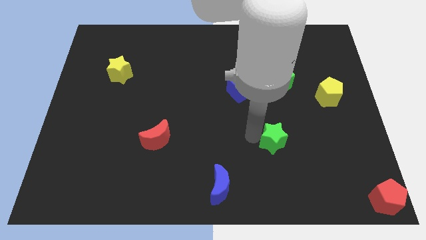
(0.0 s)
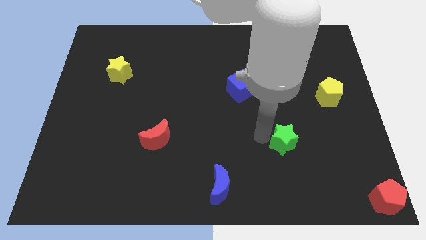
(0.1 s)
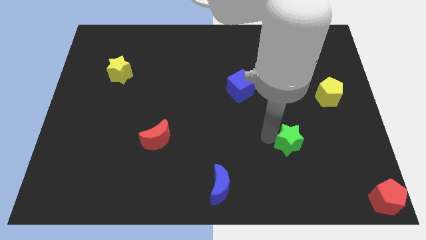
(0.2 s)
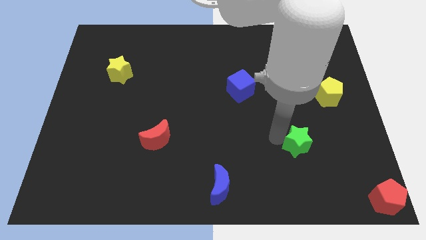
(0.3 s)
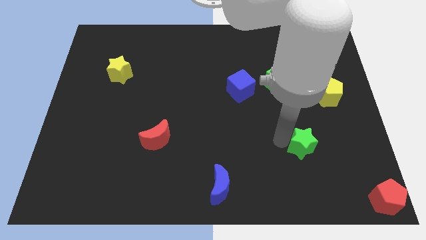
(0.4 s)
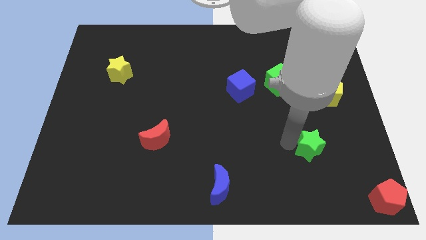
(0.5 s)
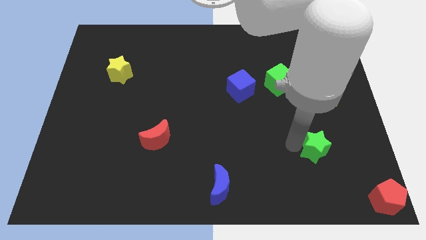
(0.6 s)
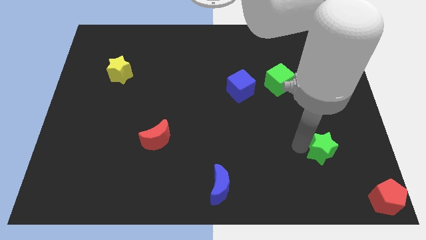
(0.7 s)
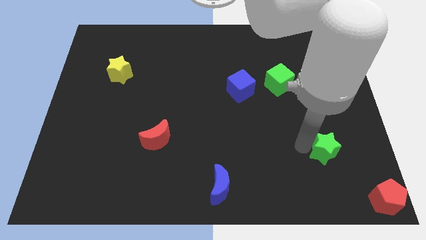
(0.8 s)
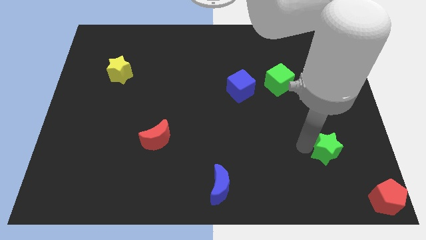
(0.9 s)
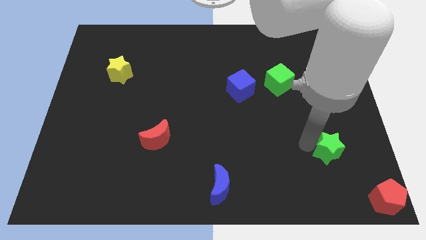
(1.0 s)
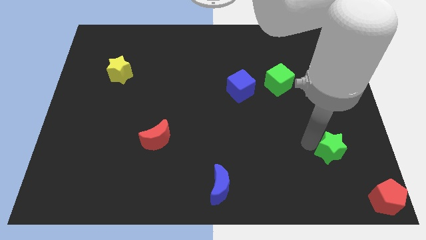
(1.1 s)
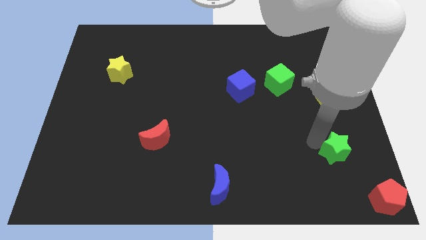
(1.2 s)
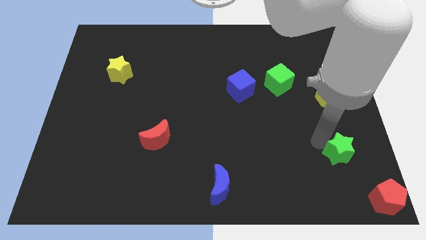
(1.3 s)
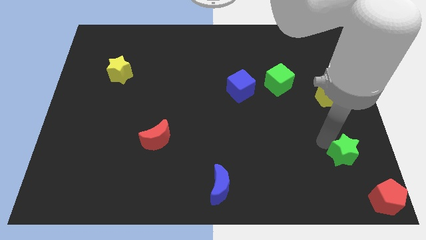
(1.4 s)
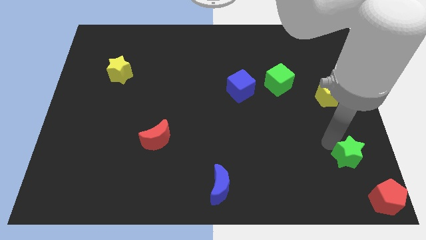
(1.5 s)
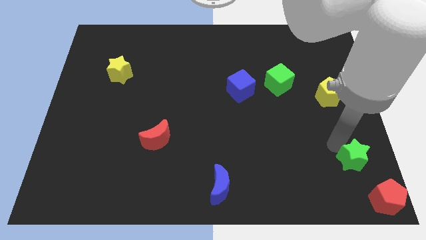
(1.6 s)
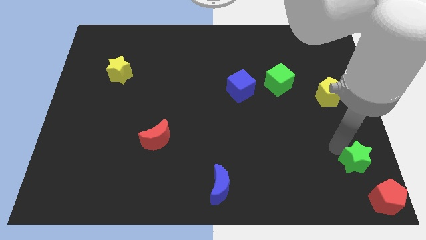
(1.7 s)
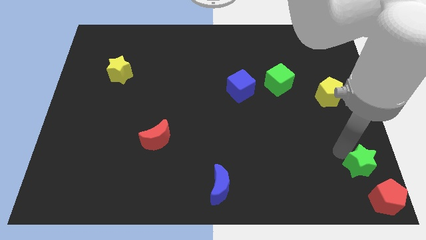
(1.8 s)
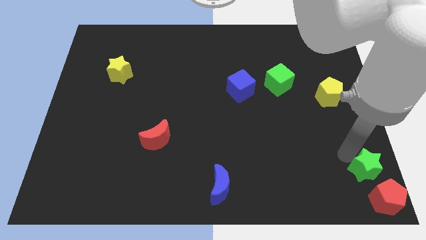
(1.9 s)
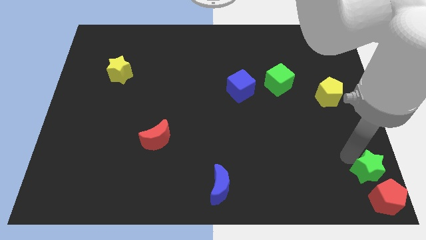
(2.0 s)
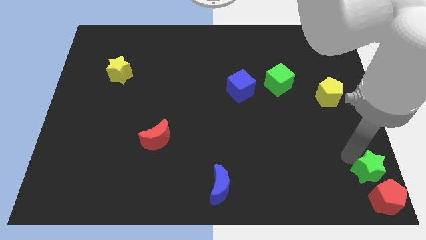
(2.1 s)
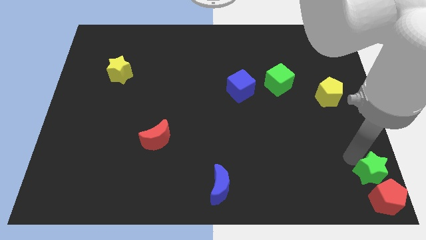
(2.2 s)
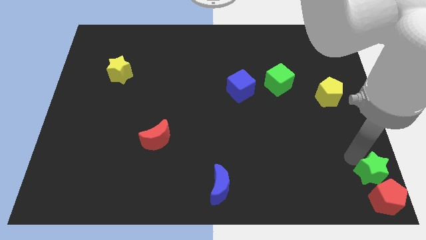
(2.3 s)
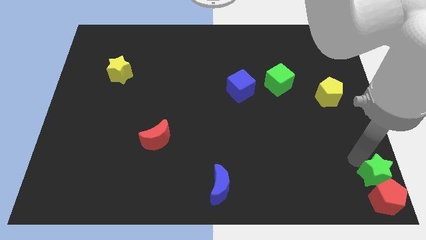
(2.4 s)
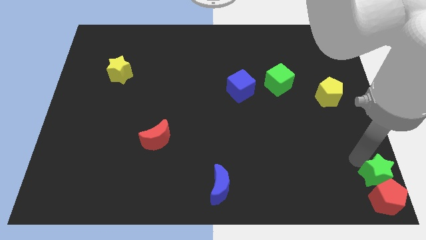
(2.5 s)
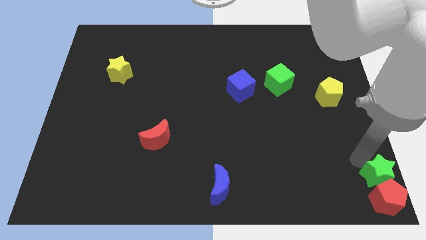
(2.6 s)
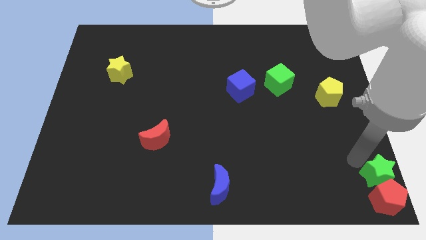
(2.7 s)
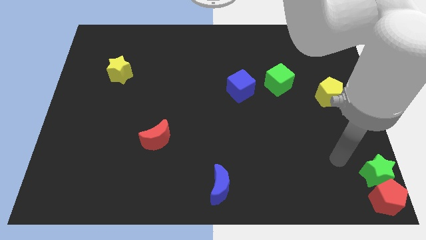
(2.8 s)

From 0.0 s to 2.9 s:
move the green star above the red pentagon

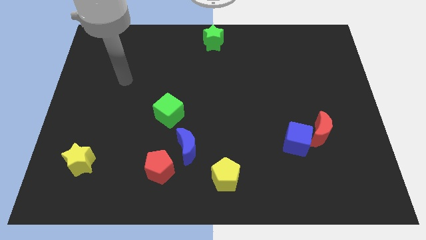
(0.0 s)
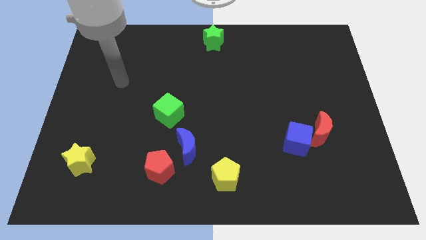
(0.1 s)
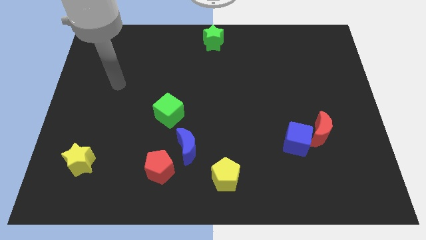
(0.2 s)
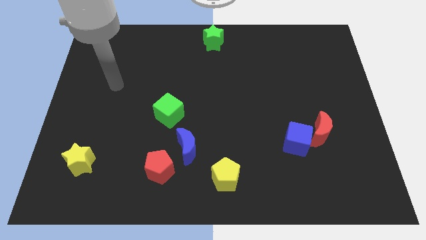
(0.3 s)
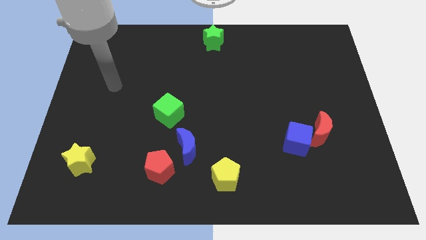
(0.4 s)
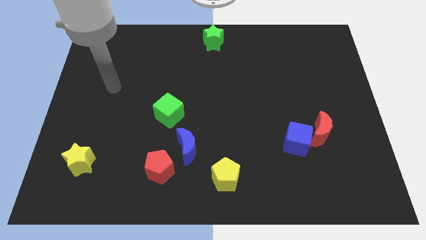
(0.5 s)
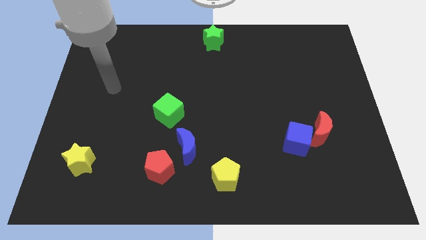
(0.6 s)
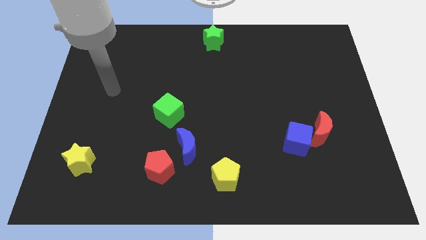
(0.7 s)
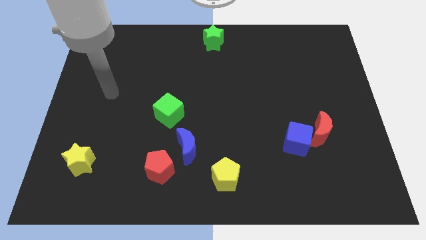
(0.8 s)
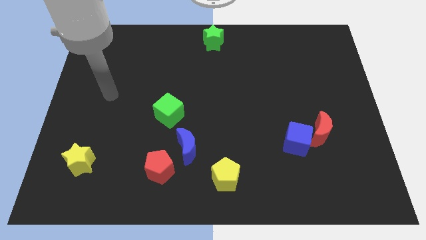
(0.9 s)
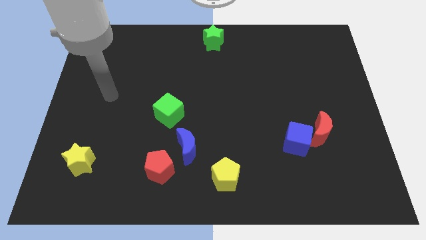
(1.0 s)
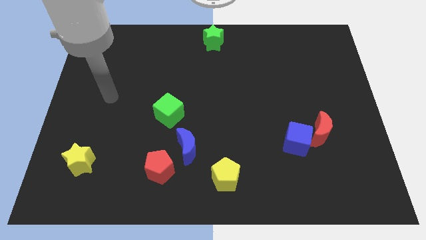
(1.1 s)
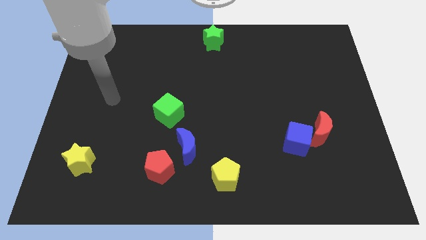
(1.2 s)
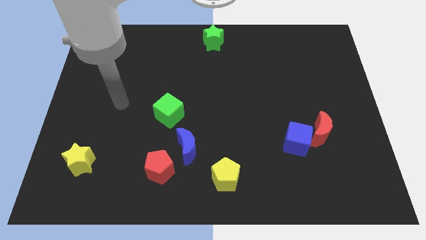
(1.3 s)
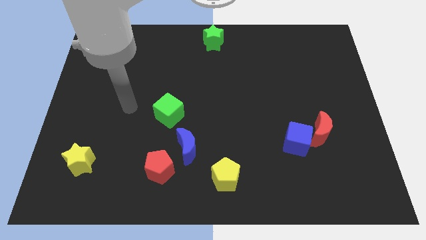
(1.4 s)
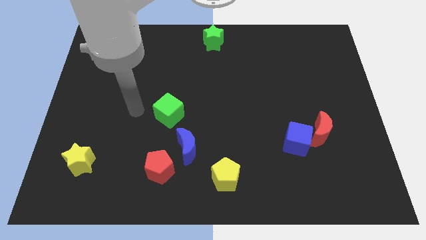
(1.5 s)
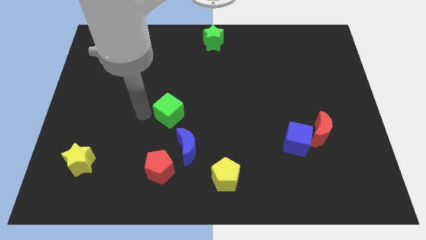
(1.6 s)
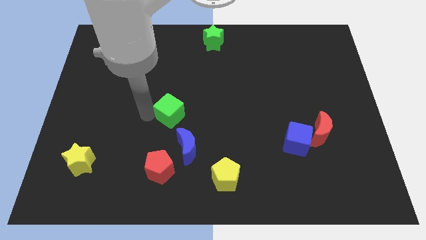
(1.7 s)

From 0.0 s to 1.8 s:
place the arm left to the green cube

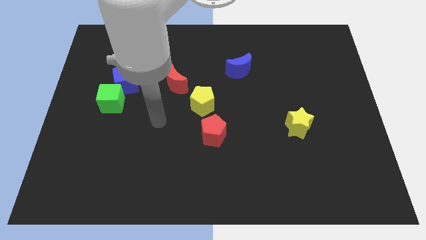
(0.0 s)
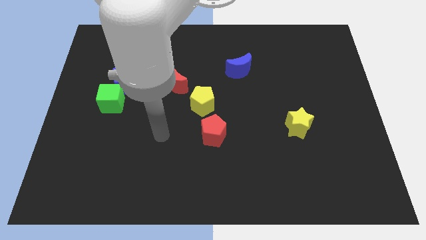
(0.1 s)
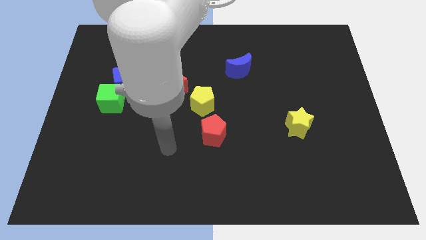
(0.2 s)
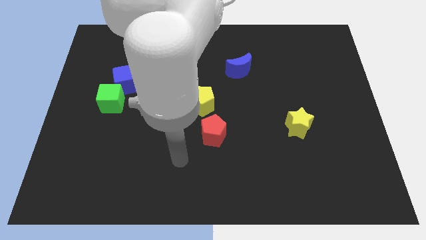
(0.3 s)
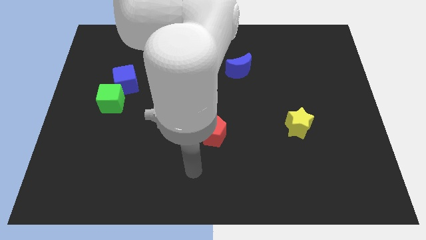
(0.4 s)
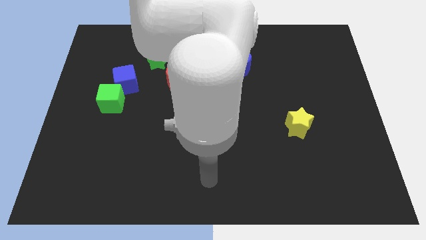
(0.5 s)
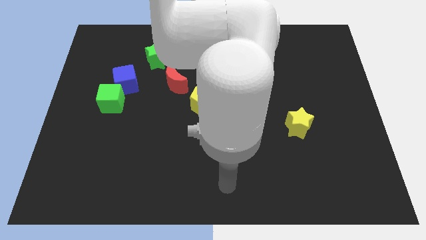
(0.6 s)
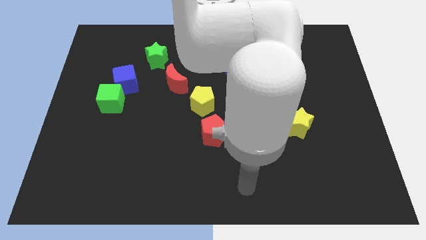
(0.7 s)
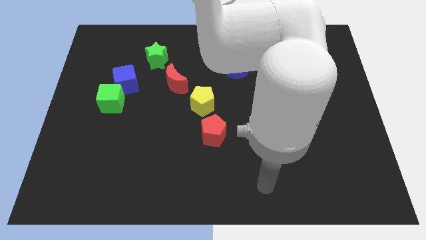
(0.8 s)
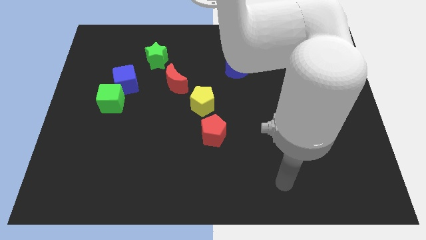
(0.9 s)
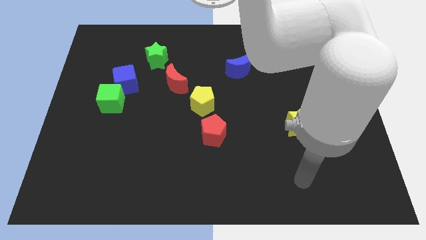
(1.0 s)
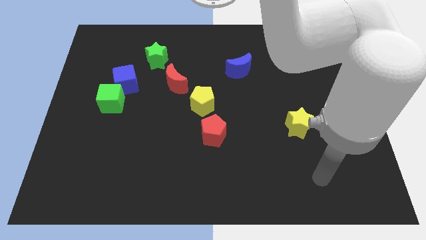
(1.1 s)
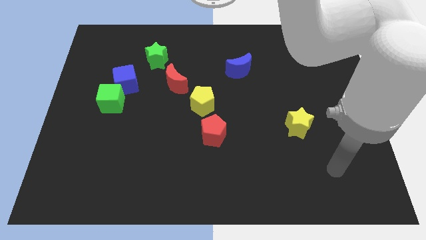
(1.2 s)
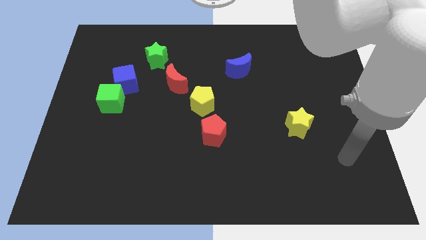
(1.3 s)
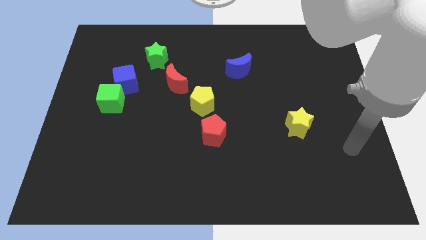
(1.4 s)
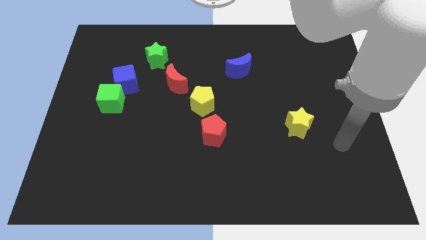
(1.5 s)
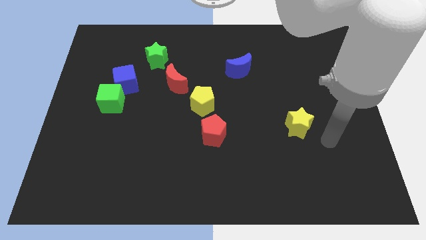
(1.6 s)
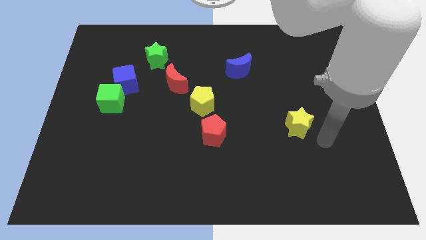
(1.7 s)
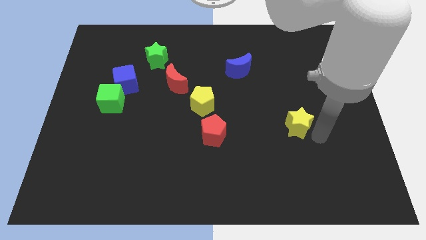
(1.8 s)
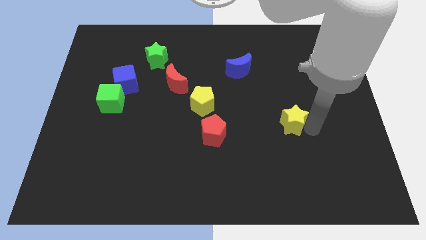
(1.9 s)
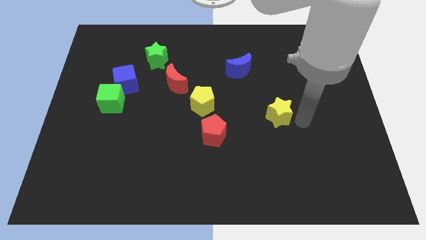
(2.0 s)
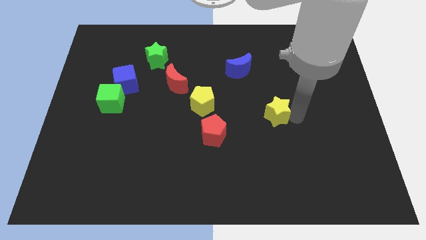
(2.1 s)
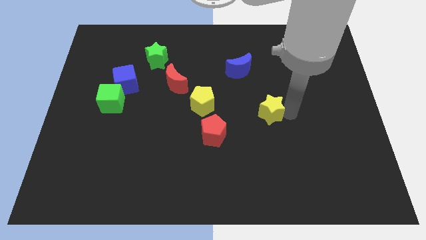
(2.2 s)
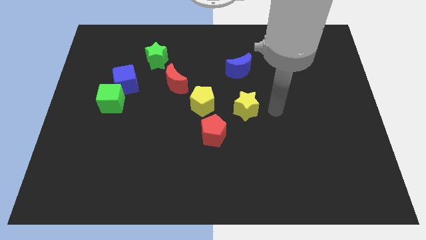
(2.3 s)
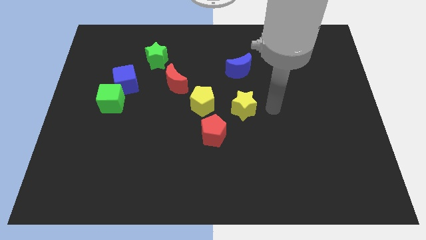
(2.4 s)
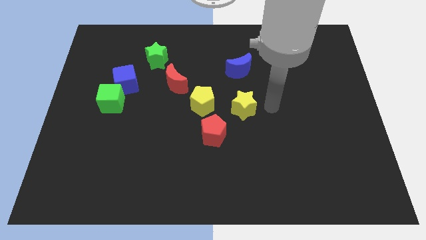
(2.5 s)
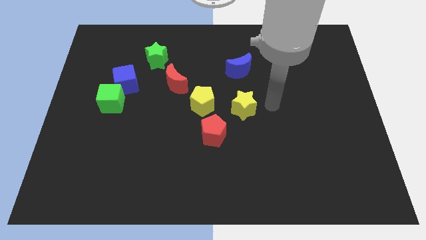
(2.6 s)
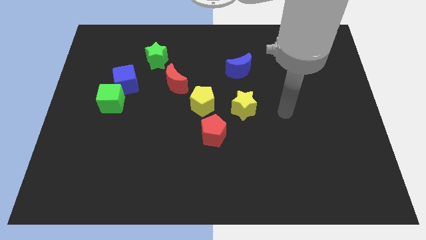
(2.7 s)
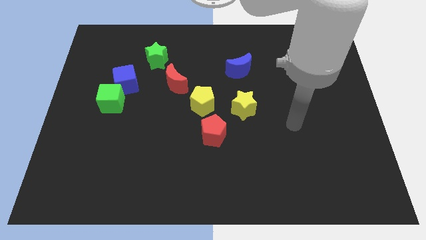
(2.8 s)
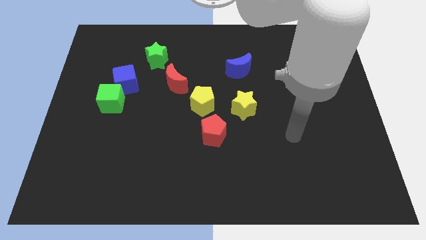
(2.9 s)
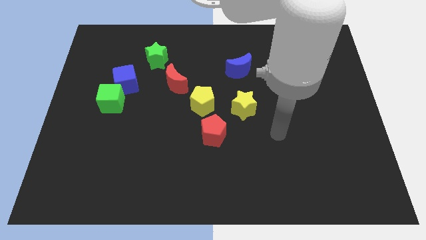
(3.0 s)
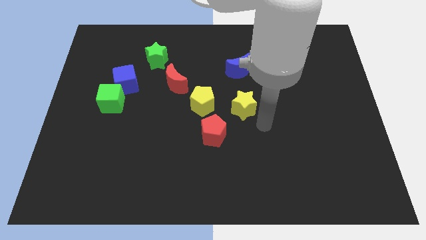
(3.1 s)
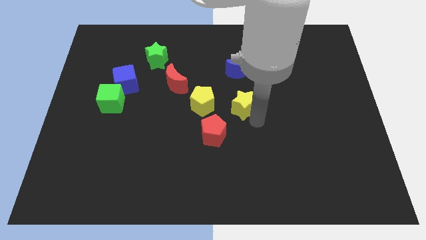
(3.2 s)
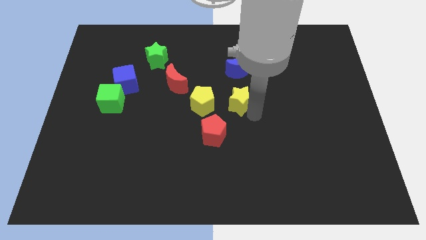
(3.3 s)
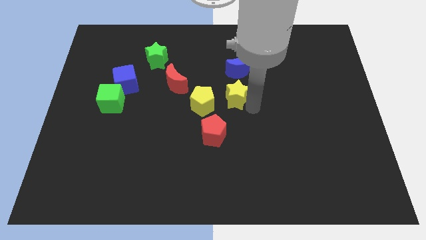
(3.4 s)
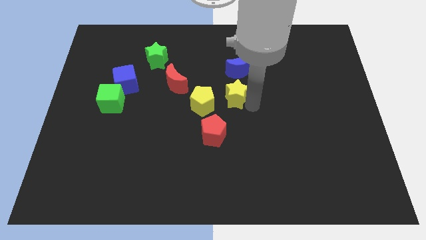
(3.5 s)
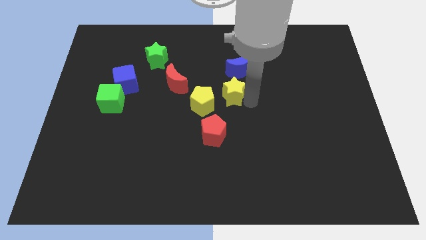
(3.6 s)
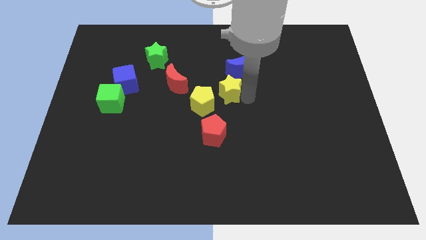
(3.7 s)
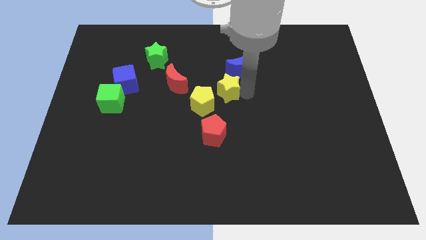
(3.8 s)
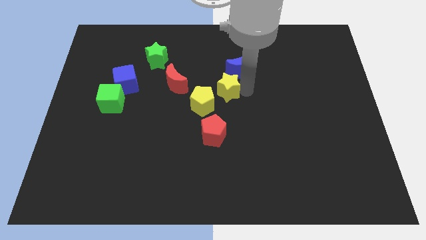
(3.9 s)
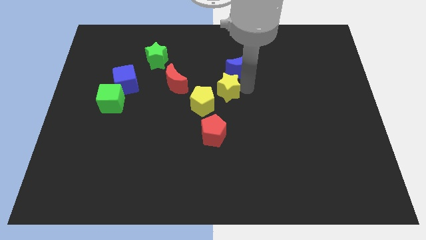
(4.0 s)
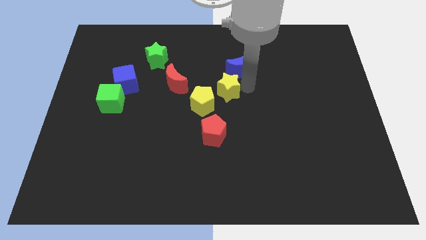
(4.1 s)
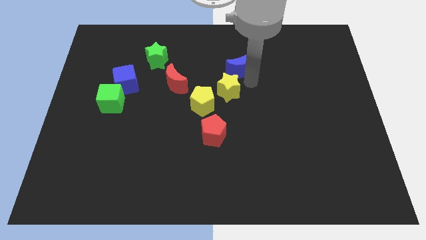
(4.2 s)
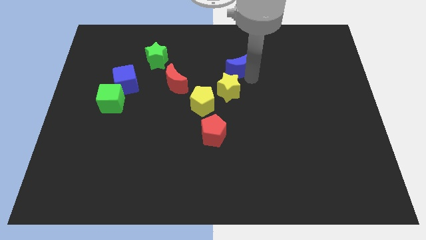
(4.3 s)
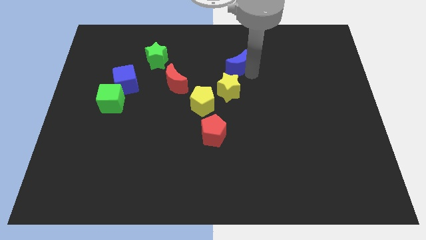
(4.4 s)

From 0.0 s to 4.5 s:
place the yellow star to the right of the red crescent
